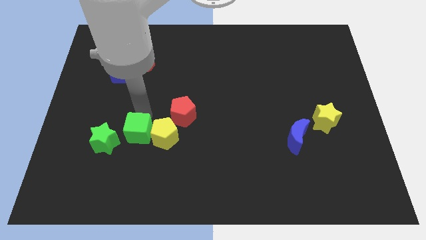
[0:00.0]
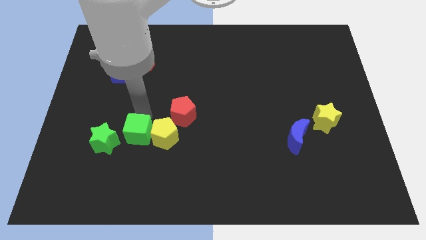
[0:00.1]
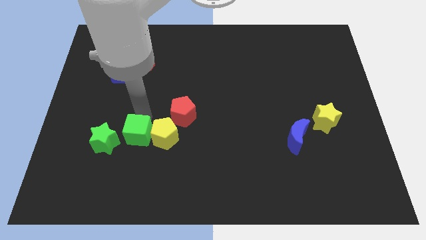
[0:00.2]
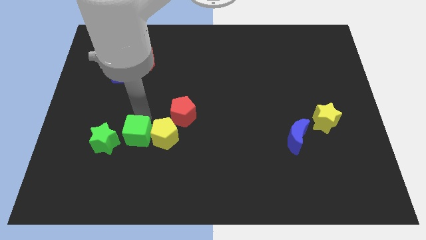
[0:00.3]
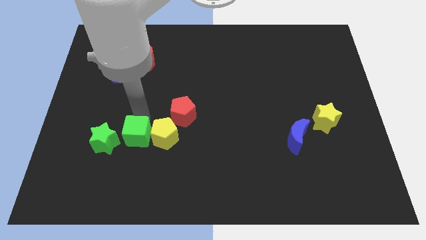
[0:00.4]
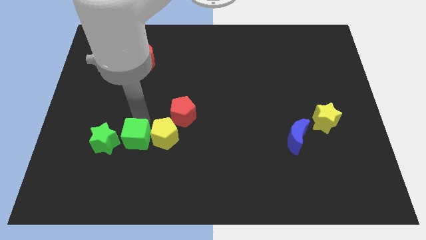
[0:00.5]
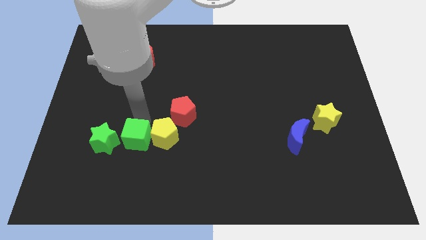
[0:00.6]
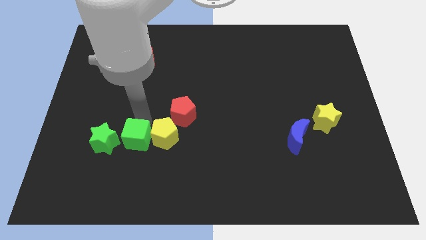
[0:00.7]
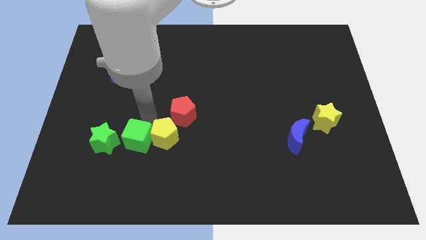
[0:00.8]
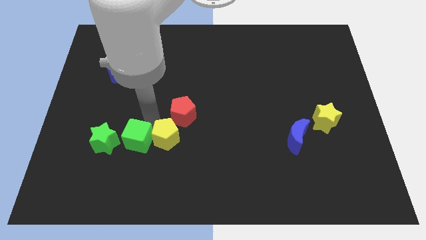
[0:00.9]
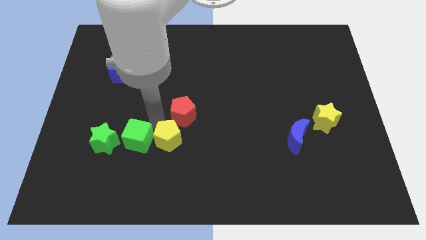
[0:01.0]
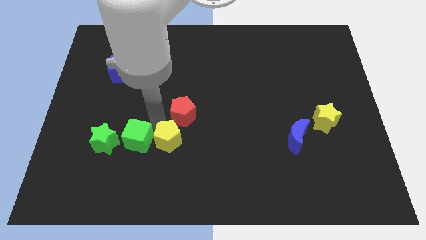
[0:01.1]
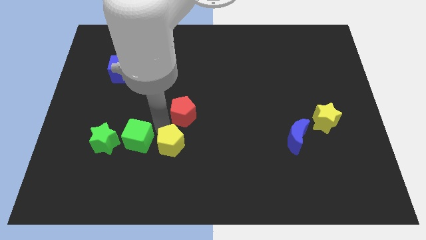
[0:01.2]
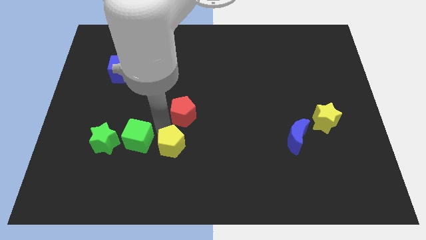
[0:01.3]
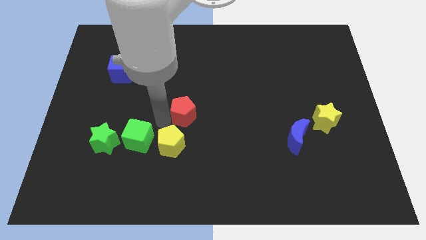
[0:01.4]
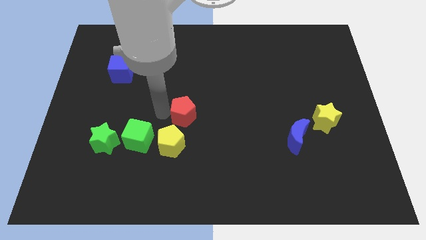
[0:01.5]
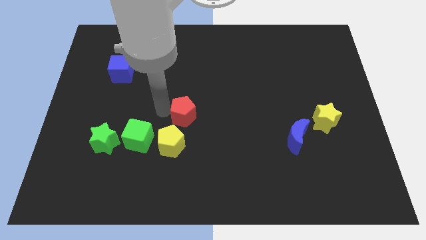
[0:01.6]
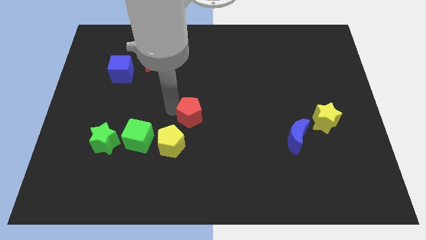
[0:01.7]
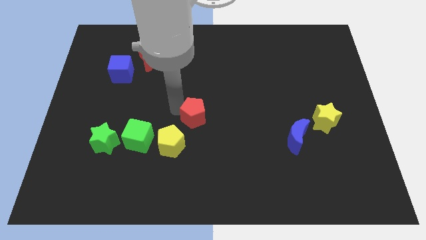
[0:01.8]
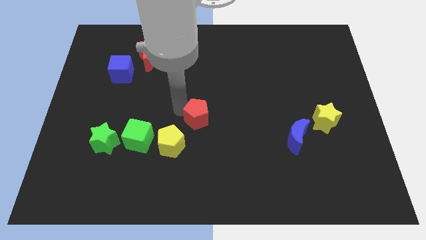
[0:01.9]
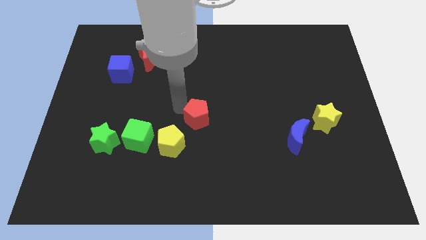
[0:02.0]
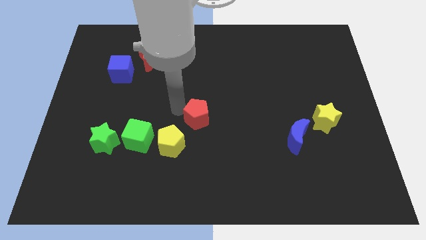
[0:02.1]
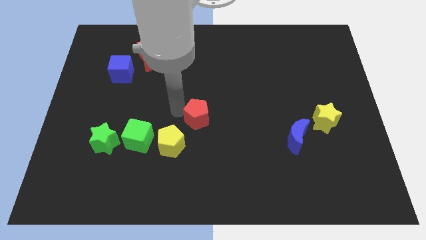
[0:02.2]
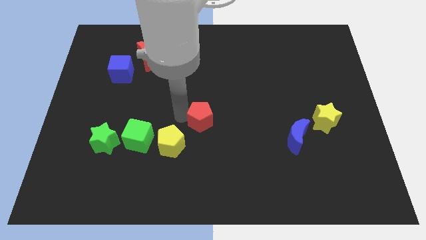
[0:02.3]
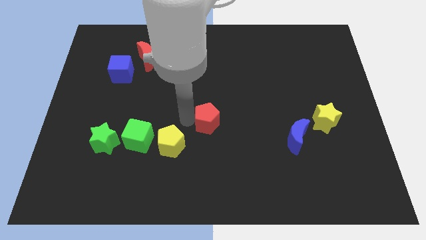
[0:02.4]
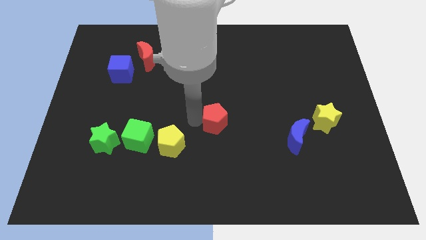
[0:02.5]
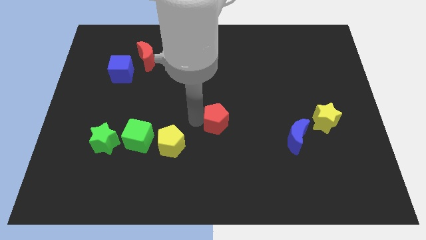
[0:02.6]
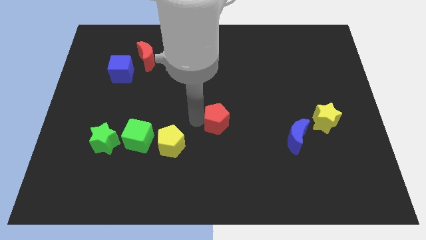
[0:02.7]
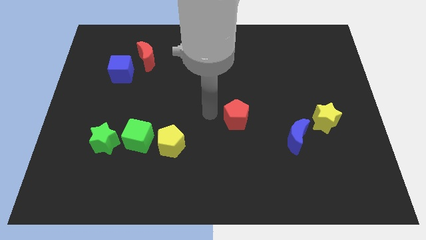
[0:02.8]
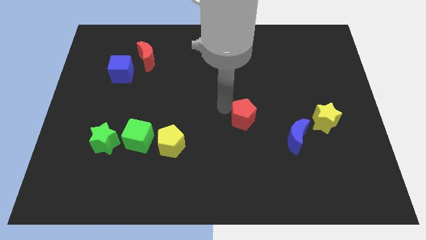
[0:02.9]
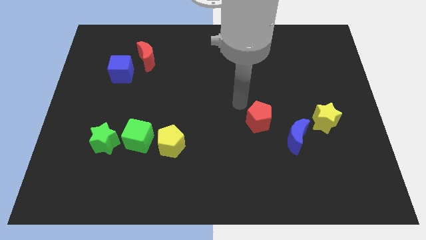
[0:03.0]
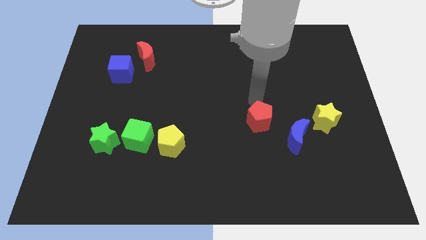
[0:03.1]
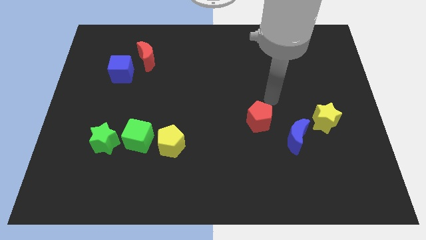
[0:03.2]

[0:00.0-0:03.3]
push the red pentagon slightly towards right

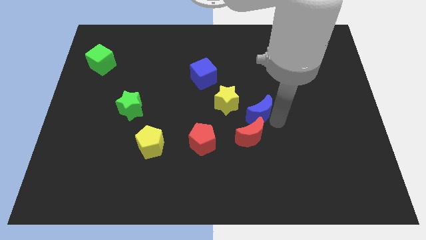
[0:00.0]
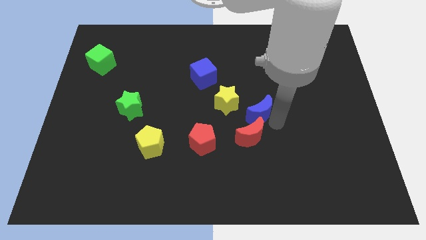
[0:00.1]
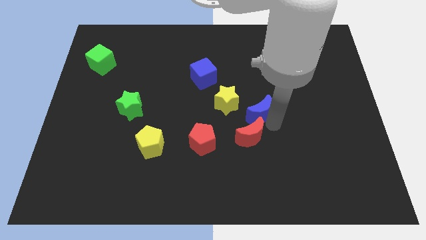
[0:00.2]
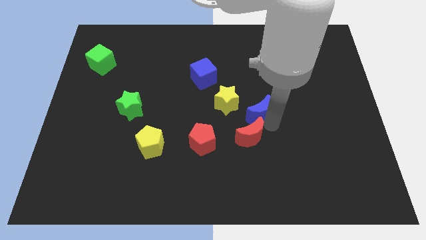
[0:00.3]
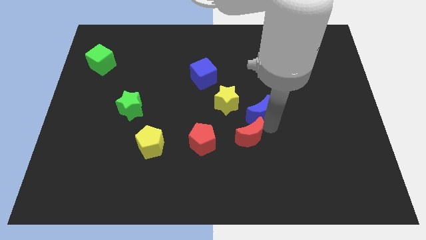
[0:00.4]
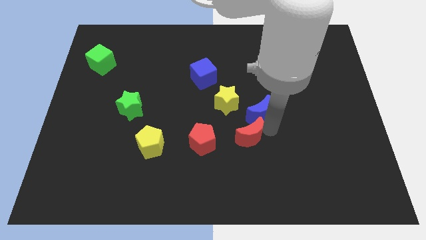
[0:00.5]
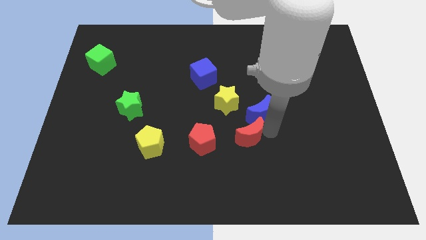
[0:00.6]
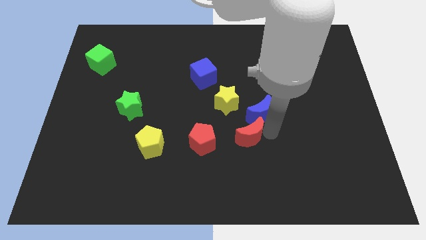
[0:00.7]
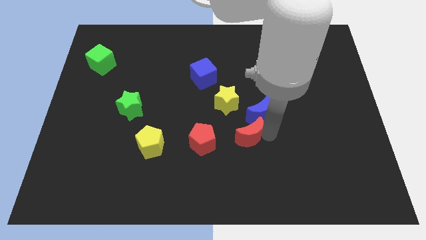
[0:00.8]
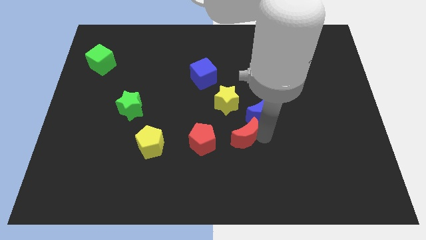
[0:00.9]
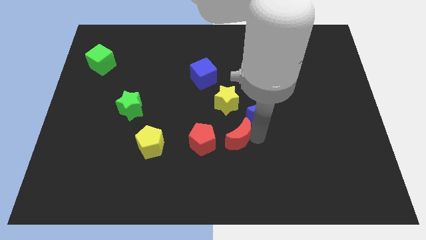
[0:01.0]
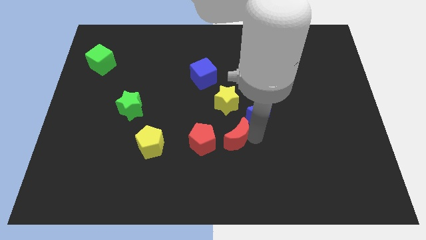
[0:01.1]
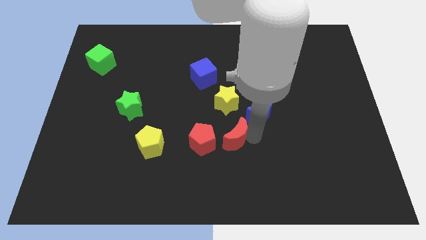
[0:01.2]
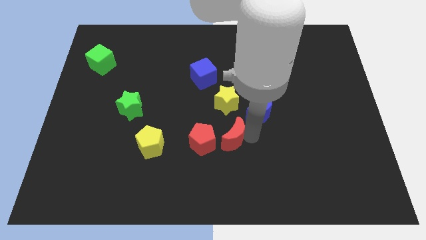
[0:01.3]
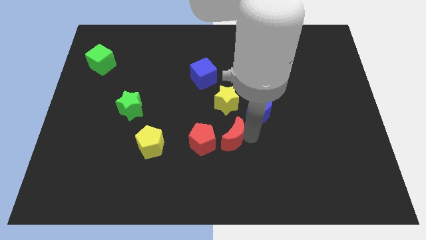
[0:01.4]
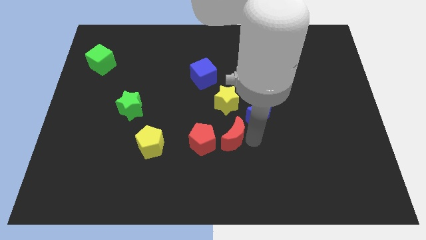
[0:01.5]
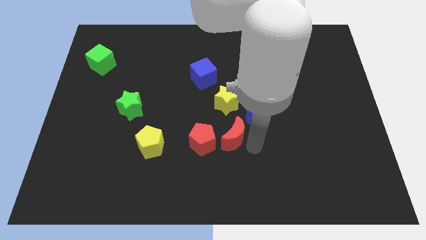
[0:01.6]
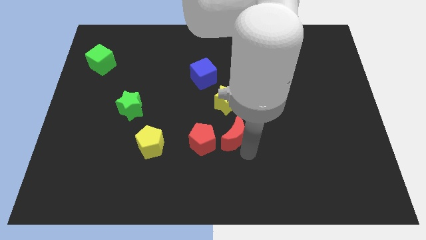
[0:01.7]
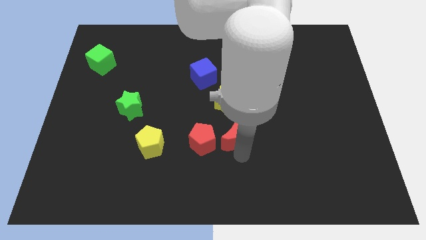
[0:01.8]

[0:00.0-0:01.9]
push the red crescent to the right of the red pentagon

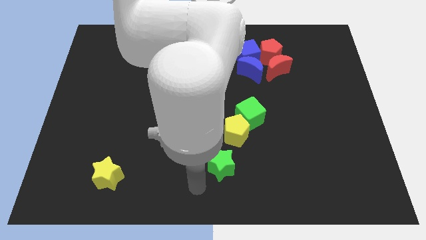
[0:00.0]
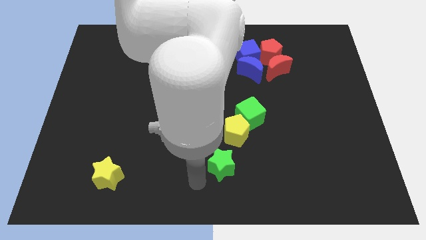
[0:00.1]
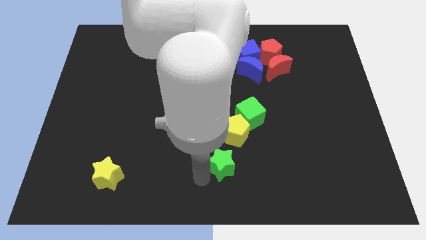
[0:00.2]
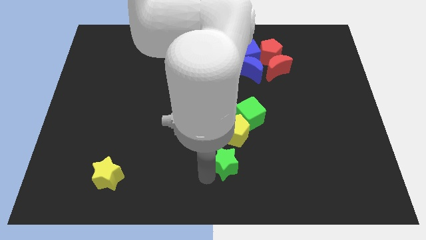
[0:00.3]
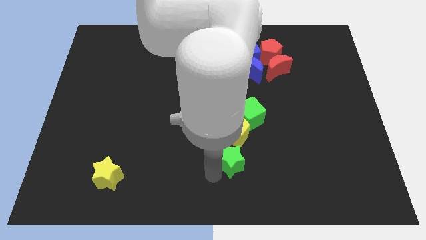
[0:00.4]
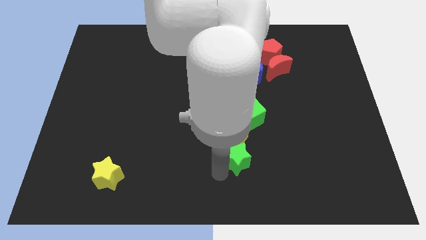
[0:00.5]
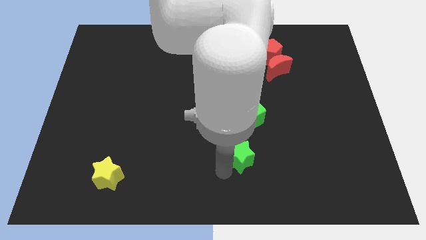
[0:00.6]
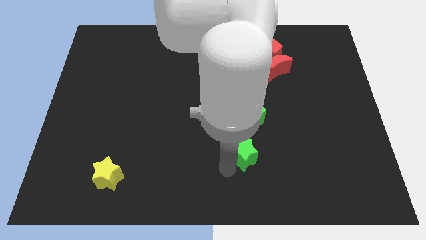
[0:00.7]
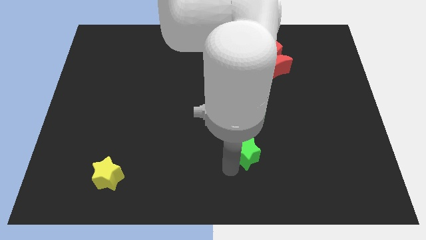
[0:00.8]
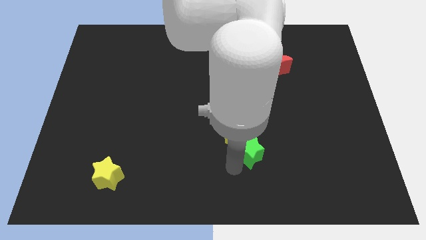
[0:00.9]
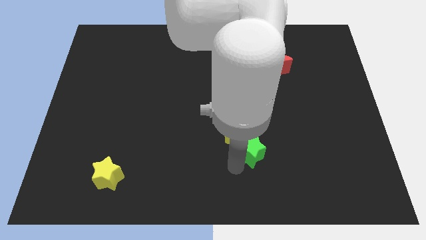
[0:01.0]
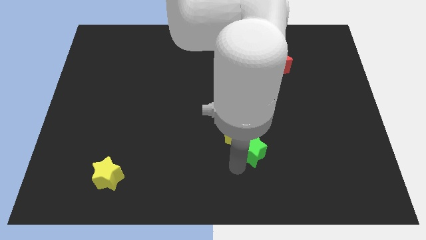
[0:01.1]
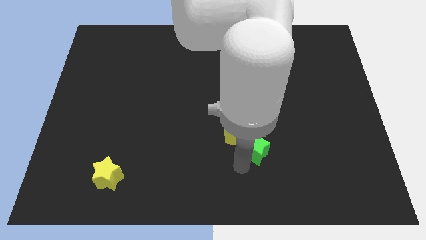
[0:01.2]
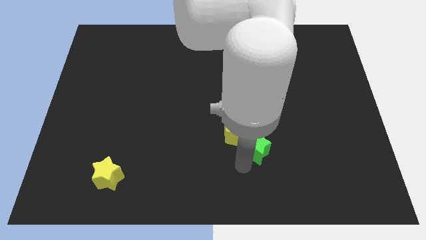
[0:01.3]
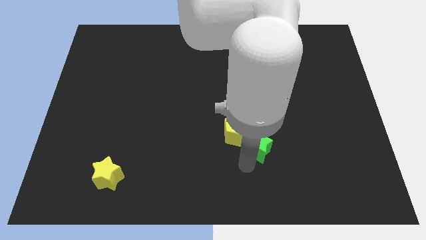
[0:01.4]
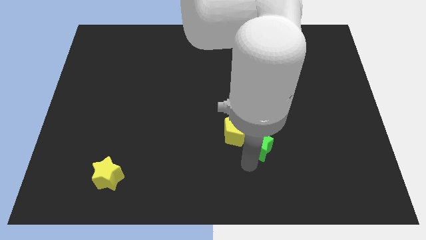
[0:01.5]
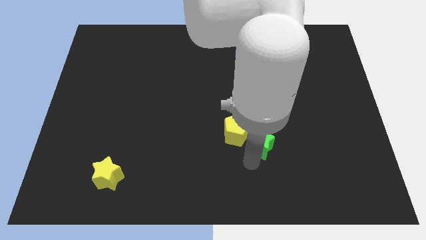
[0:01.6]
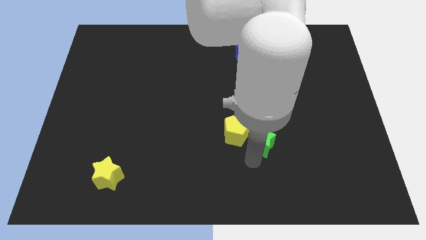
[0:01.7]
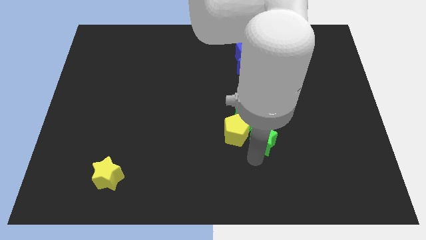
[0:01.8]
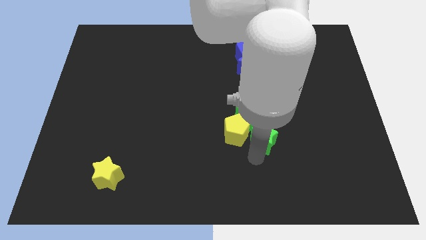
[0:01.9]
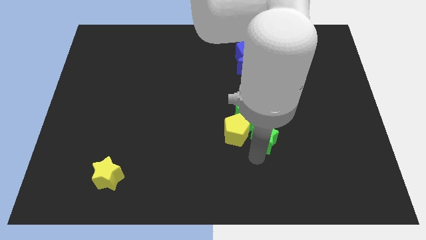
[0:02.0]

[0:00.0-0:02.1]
place the green star right to the yellow pentagon

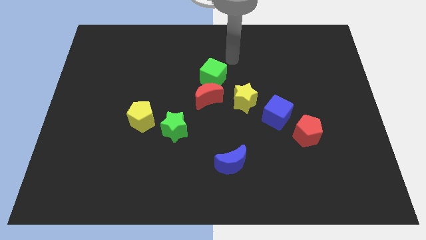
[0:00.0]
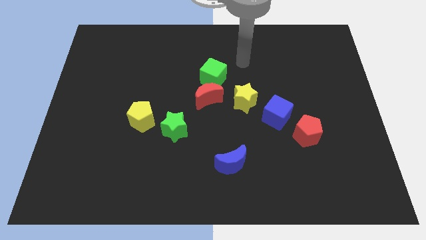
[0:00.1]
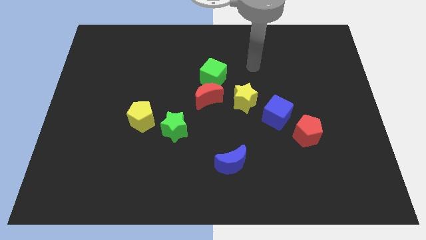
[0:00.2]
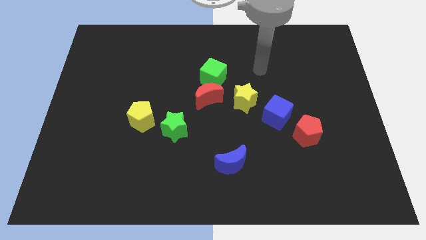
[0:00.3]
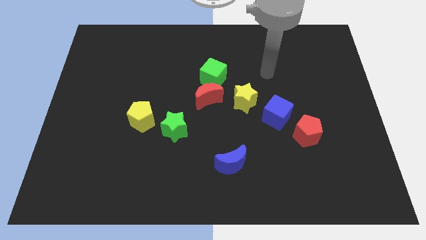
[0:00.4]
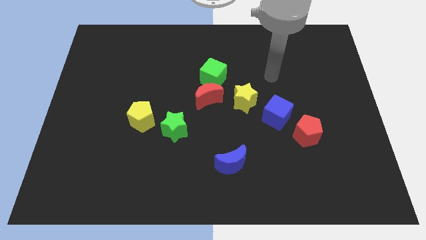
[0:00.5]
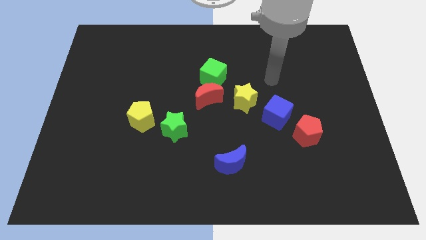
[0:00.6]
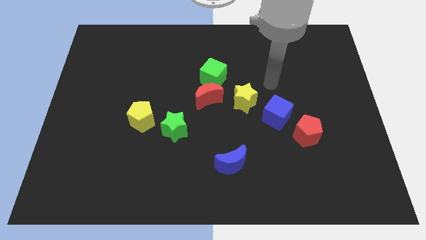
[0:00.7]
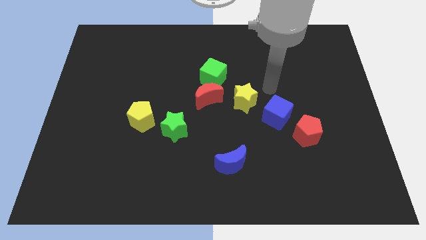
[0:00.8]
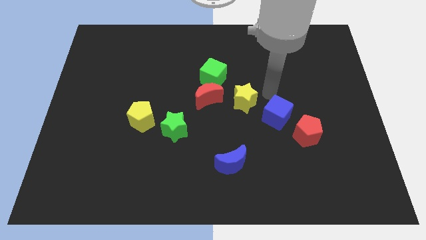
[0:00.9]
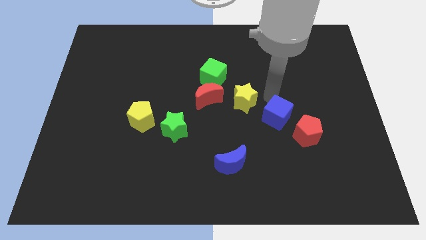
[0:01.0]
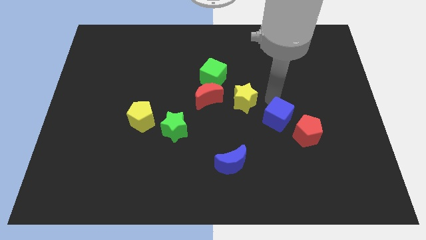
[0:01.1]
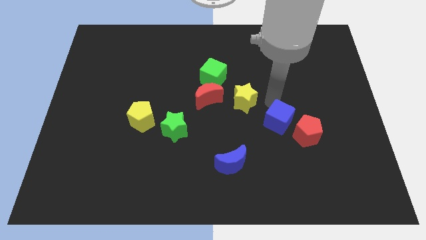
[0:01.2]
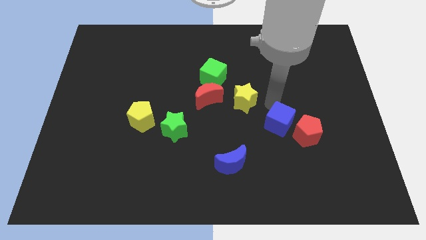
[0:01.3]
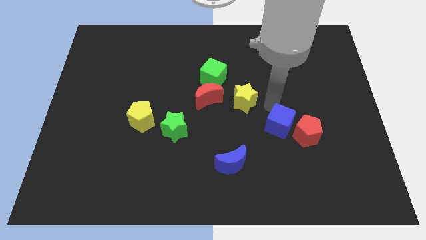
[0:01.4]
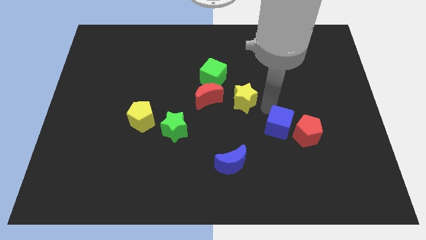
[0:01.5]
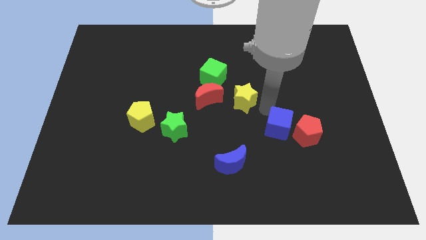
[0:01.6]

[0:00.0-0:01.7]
slightly move the blue cube towards the bottom side

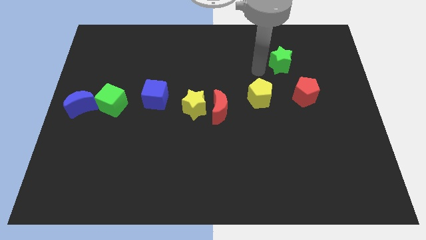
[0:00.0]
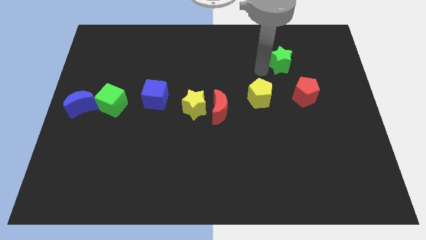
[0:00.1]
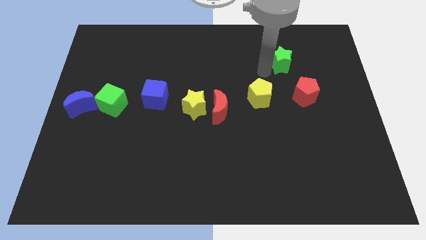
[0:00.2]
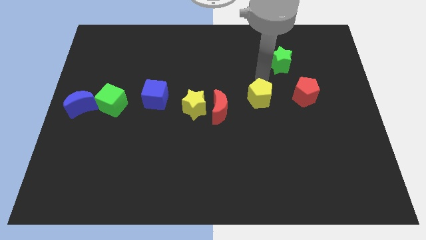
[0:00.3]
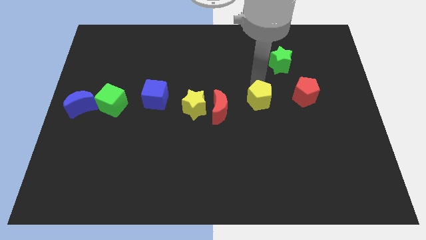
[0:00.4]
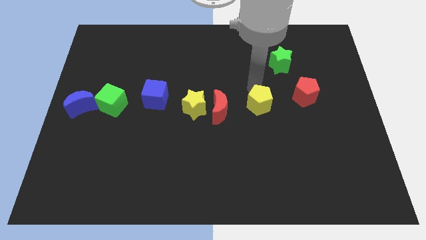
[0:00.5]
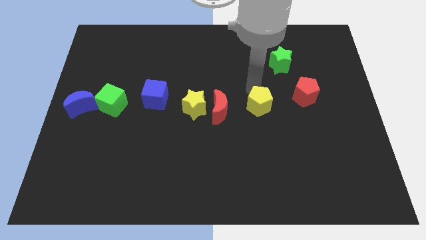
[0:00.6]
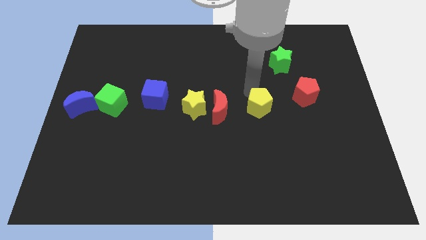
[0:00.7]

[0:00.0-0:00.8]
put the yellow pentagon parallel to the red crescent
